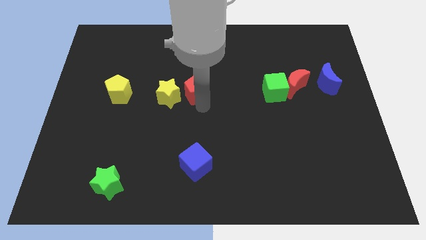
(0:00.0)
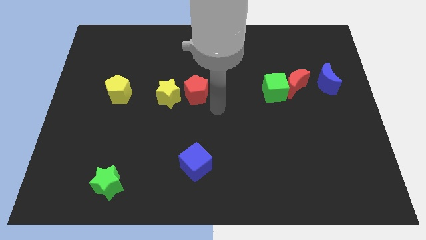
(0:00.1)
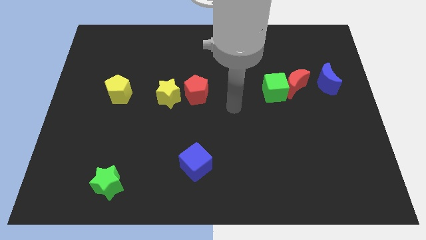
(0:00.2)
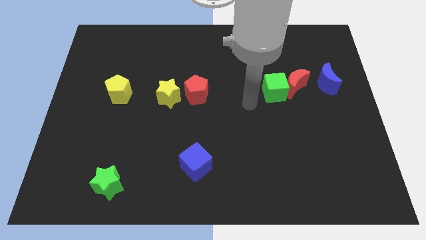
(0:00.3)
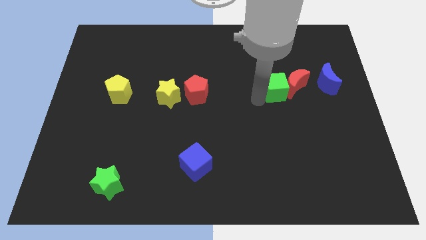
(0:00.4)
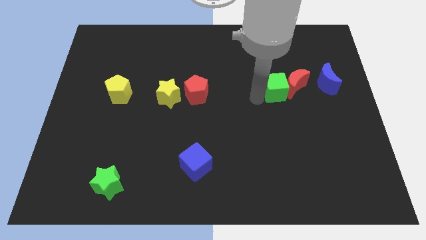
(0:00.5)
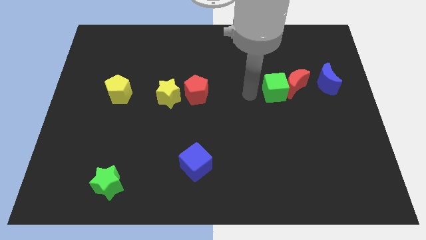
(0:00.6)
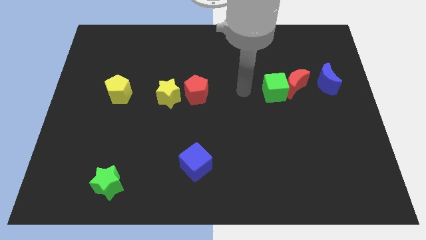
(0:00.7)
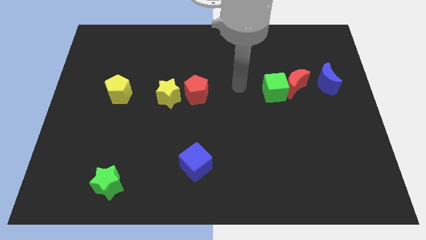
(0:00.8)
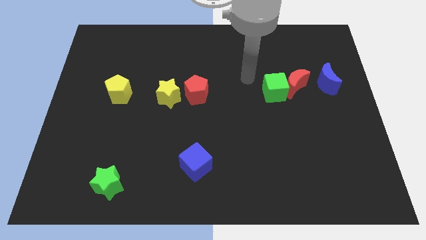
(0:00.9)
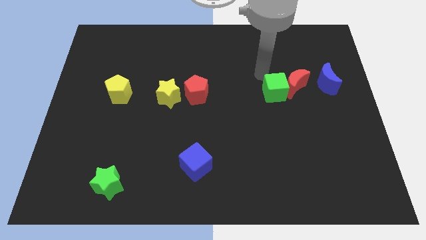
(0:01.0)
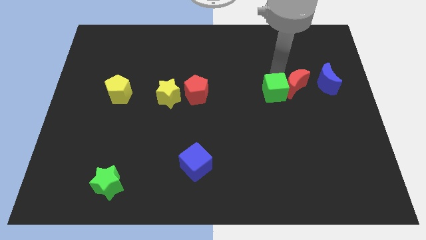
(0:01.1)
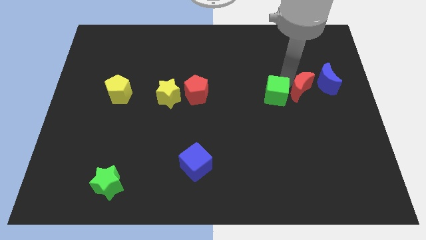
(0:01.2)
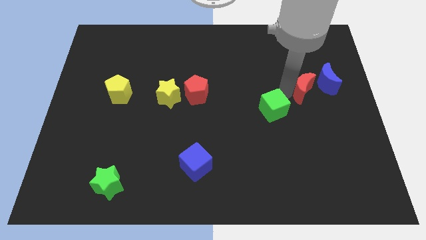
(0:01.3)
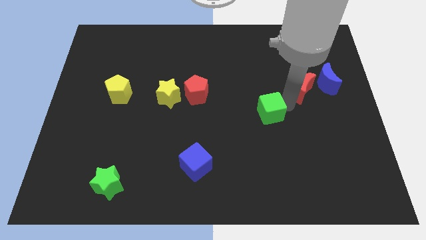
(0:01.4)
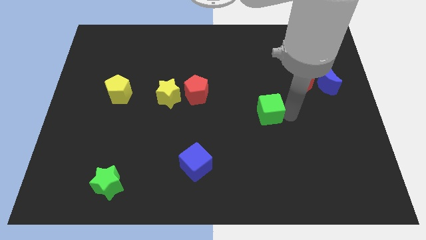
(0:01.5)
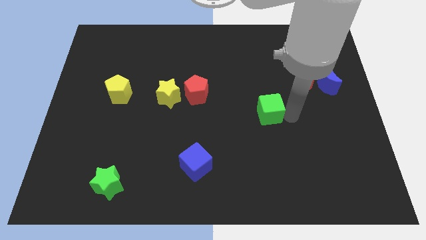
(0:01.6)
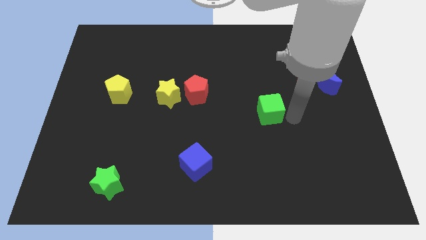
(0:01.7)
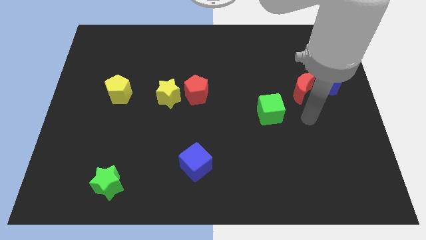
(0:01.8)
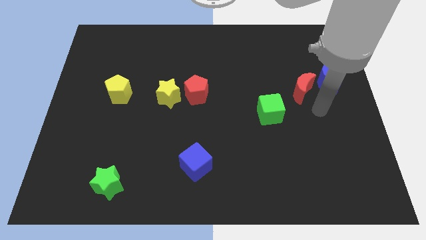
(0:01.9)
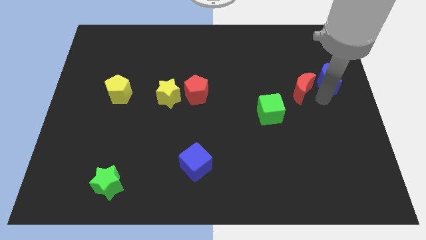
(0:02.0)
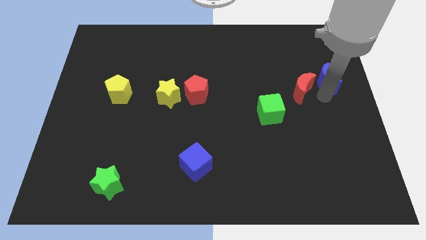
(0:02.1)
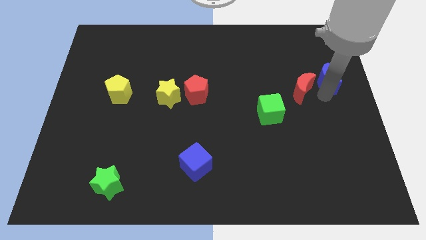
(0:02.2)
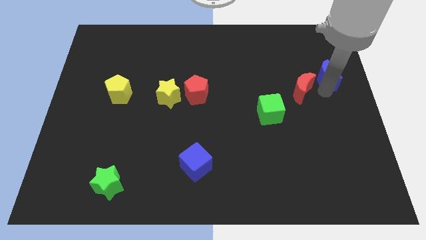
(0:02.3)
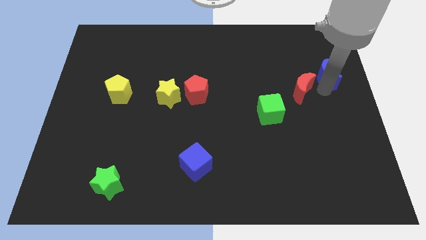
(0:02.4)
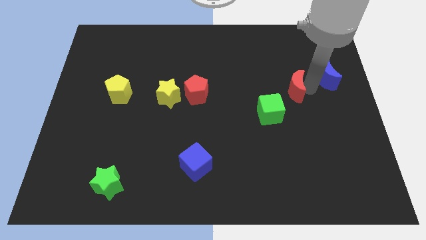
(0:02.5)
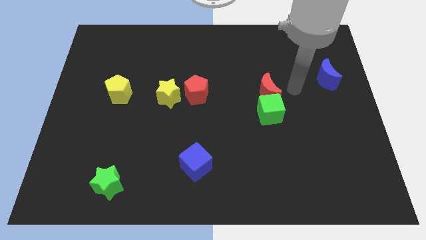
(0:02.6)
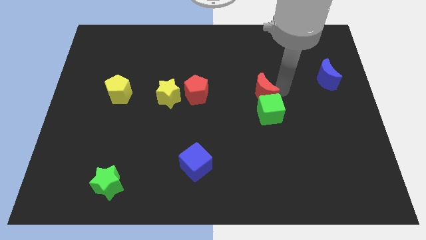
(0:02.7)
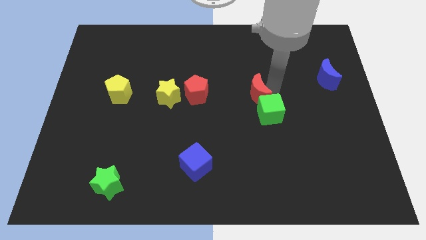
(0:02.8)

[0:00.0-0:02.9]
place the green cube in between the blue moon and blue cube

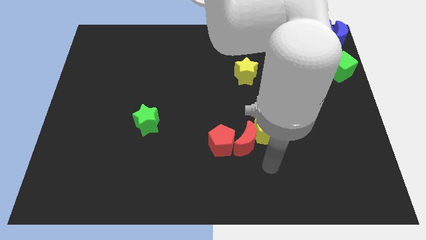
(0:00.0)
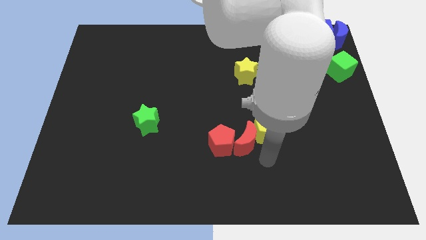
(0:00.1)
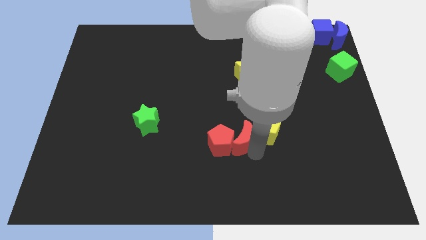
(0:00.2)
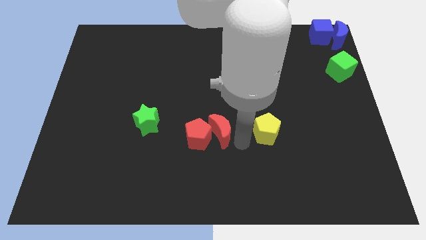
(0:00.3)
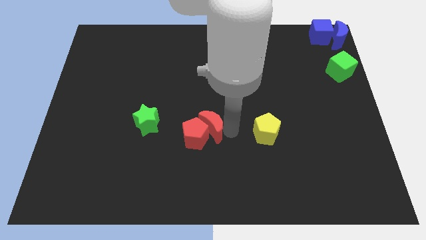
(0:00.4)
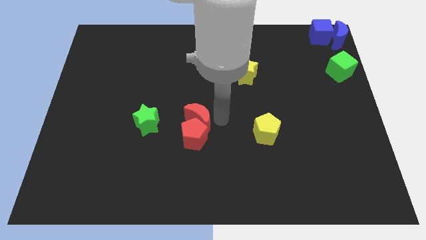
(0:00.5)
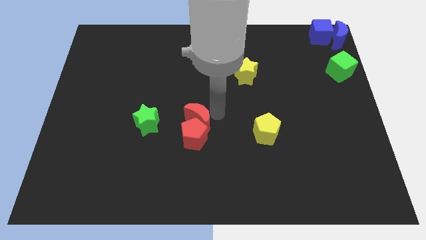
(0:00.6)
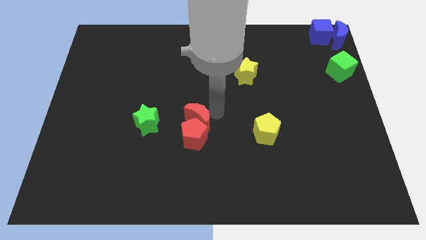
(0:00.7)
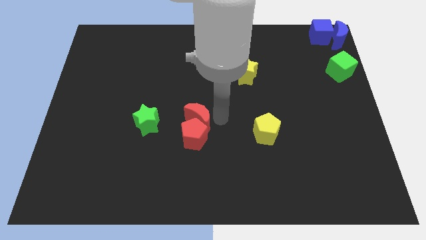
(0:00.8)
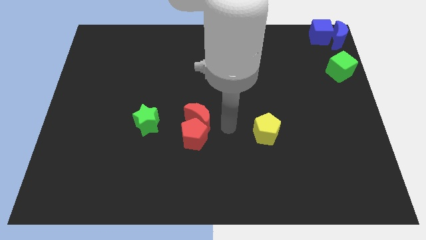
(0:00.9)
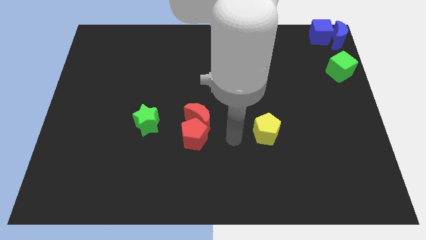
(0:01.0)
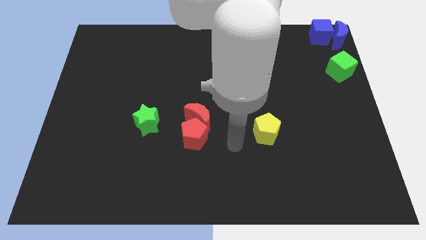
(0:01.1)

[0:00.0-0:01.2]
push the red moon to the top side of the red pentagon

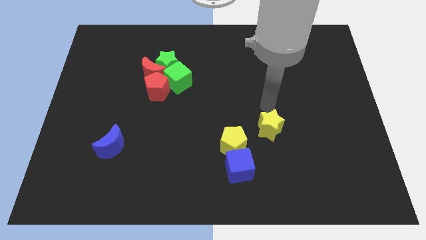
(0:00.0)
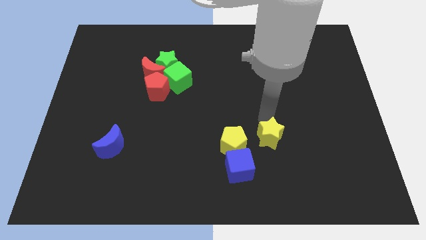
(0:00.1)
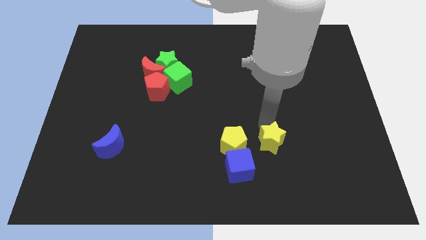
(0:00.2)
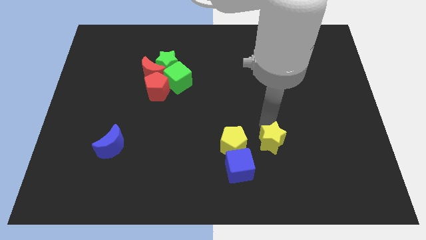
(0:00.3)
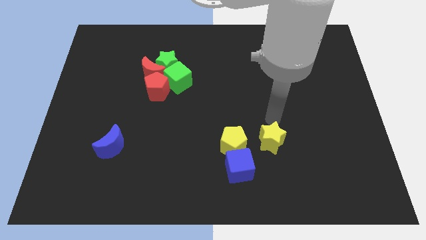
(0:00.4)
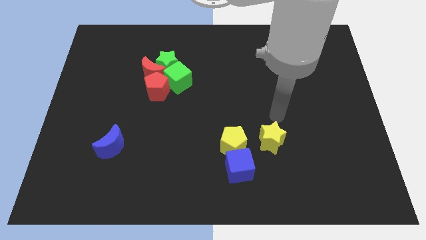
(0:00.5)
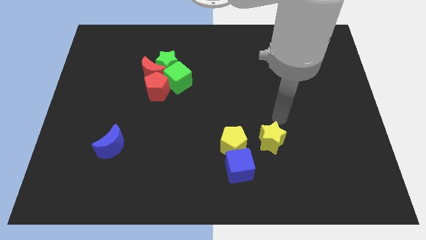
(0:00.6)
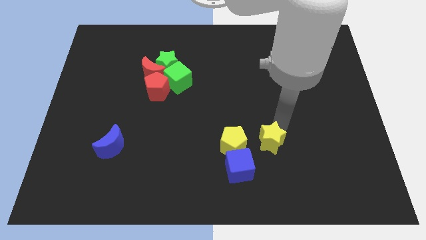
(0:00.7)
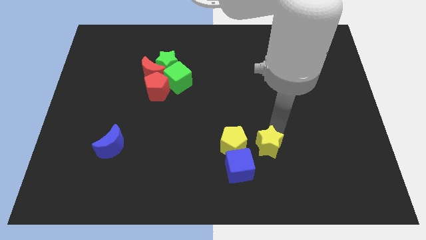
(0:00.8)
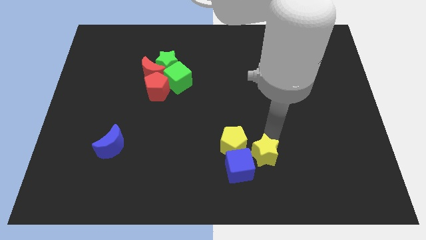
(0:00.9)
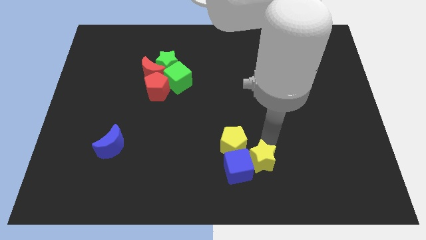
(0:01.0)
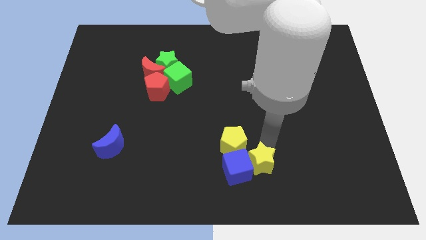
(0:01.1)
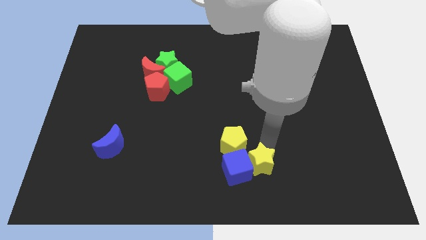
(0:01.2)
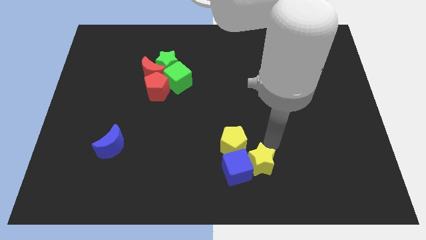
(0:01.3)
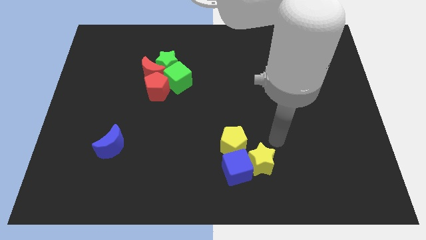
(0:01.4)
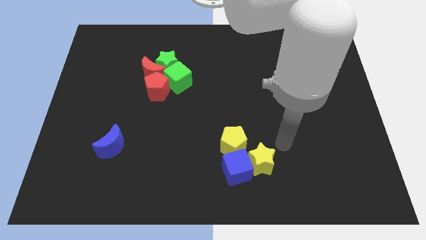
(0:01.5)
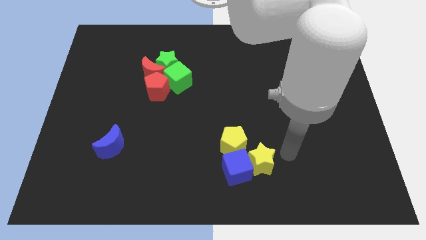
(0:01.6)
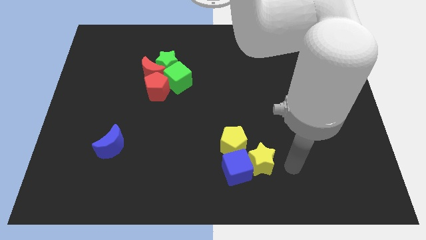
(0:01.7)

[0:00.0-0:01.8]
push the yellow star right side of the blue cube

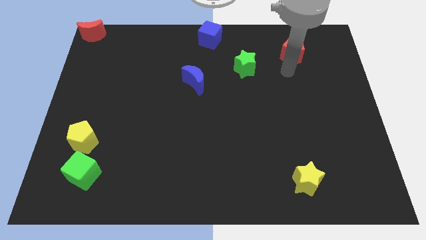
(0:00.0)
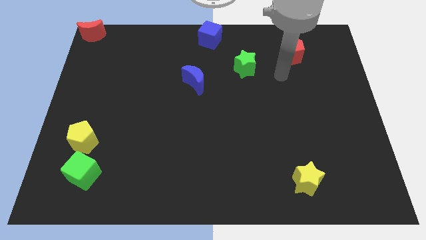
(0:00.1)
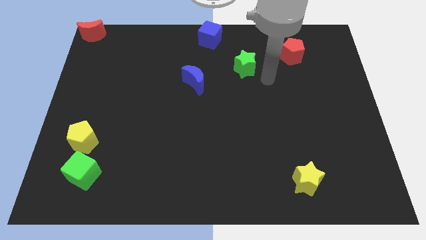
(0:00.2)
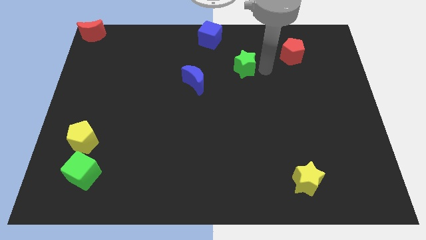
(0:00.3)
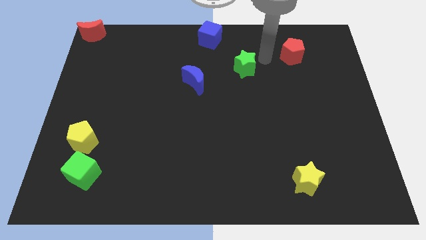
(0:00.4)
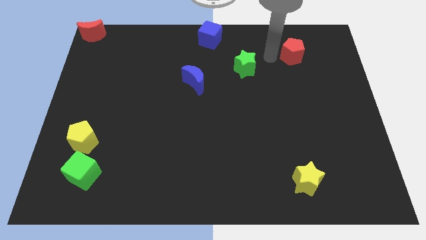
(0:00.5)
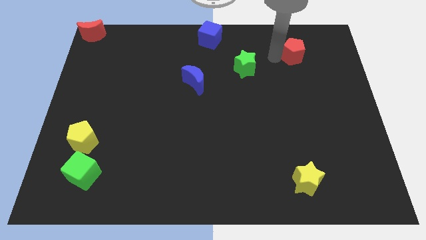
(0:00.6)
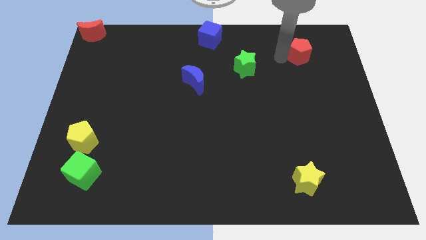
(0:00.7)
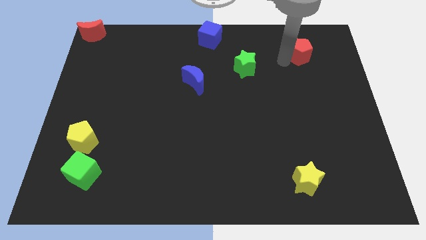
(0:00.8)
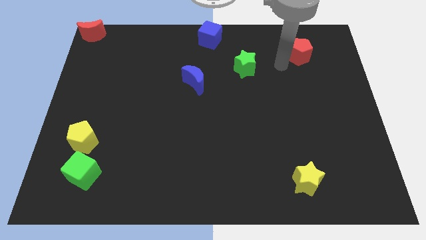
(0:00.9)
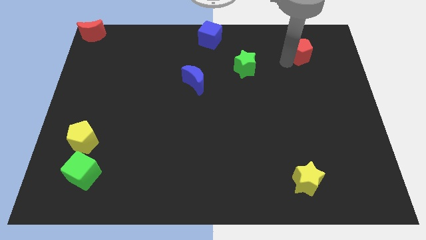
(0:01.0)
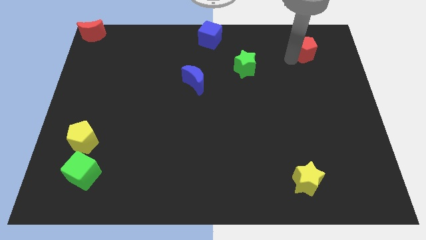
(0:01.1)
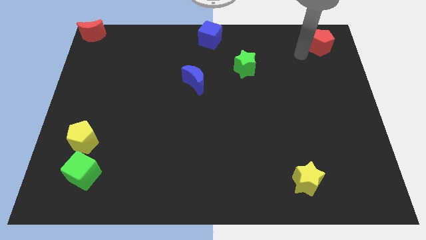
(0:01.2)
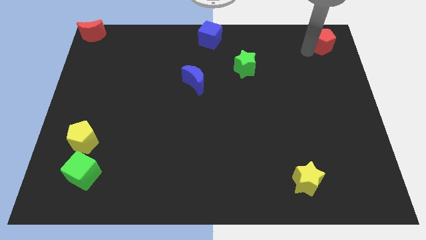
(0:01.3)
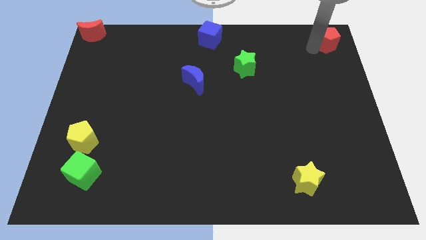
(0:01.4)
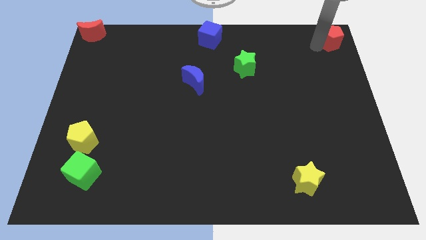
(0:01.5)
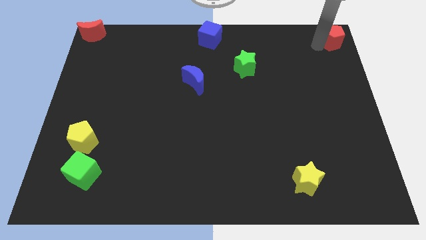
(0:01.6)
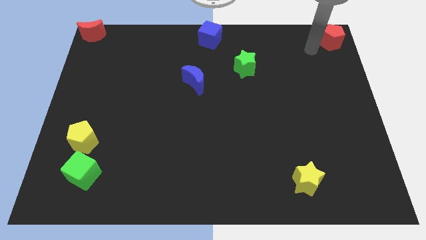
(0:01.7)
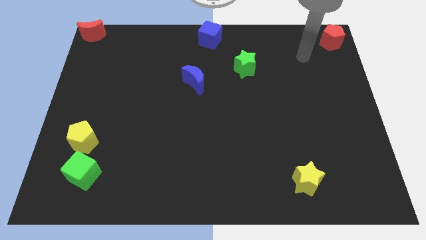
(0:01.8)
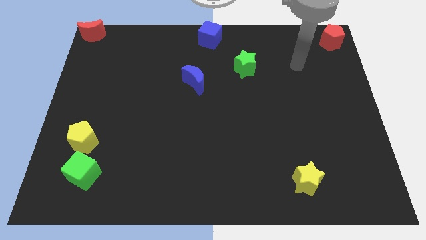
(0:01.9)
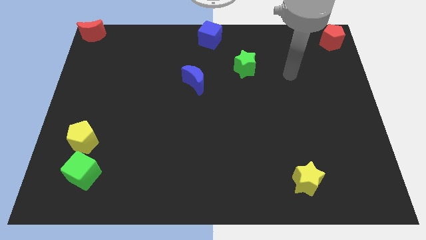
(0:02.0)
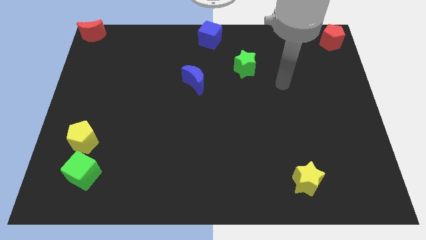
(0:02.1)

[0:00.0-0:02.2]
push the red pentagon towards top right

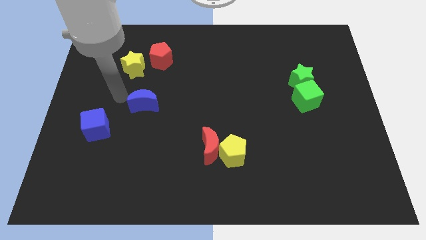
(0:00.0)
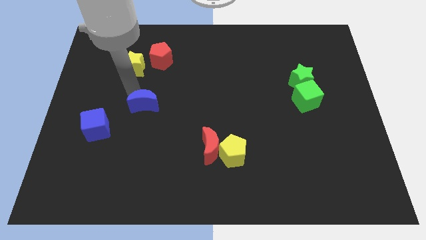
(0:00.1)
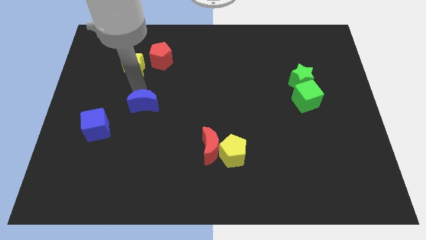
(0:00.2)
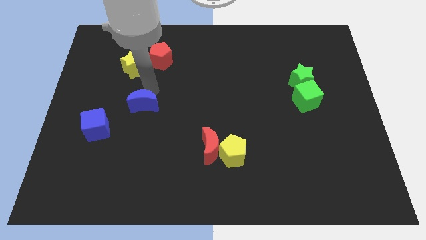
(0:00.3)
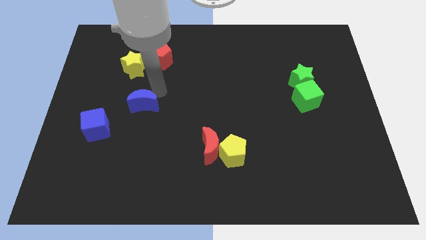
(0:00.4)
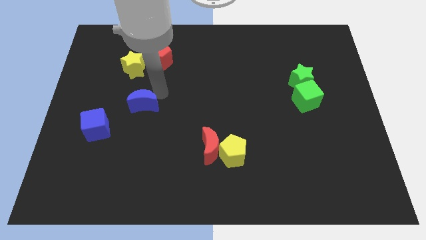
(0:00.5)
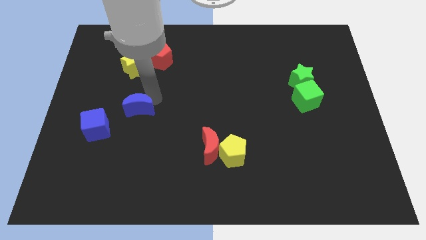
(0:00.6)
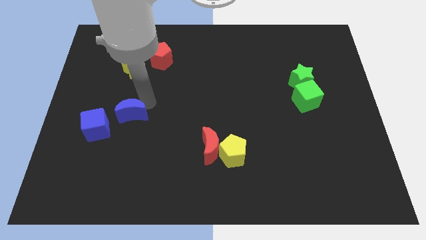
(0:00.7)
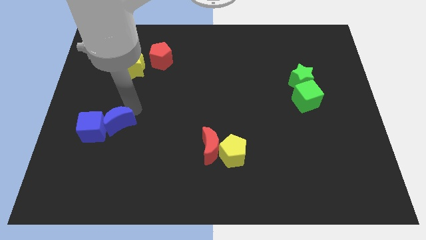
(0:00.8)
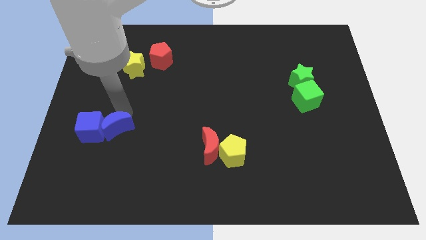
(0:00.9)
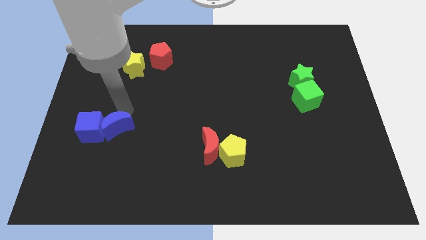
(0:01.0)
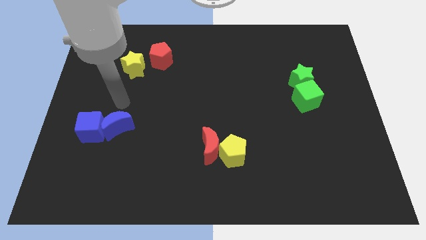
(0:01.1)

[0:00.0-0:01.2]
move the blue moon into the blue cube
